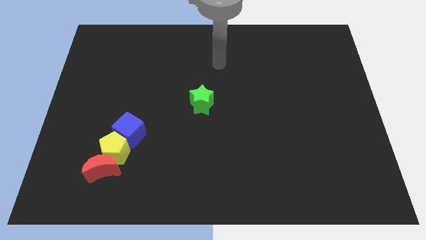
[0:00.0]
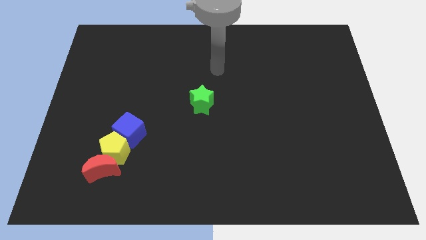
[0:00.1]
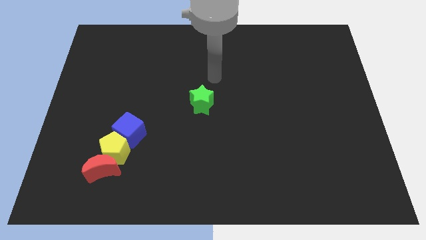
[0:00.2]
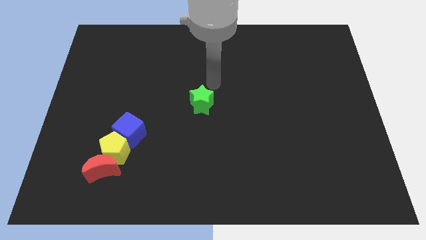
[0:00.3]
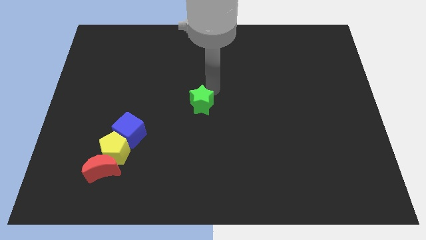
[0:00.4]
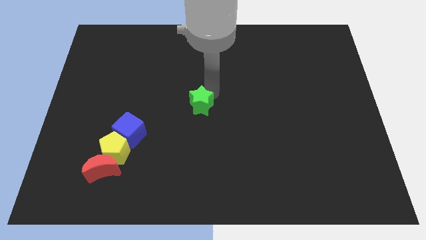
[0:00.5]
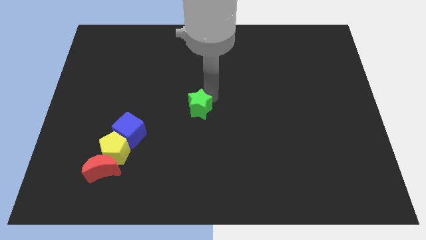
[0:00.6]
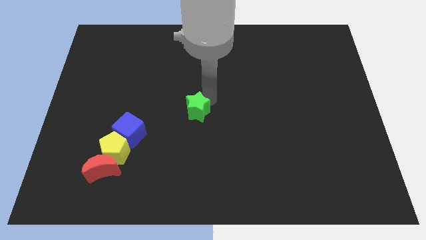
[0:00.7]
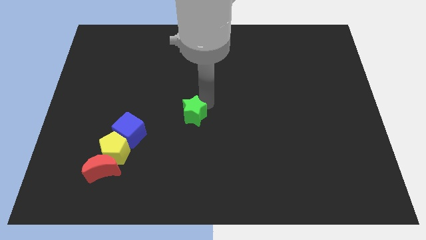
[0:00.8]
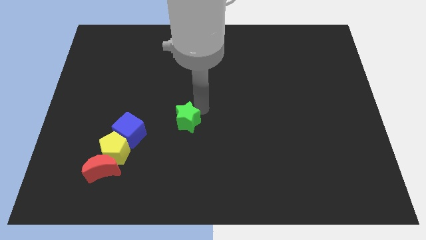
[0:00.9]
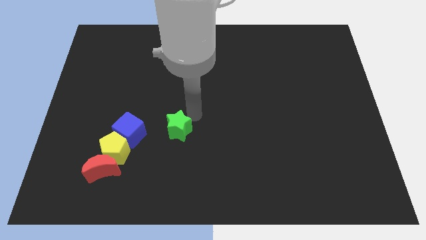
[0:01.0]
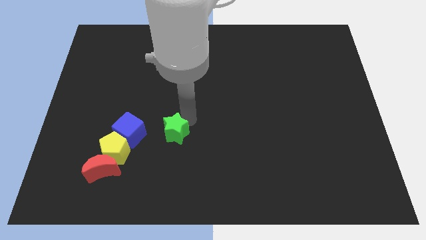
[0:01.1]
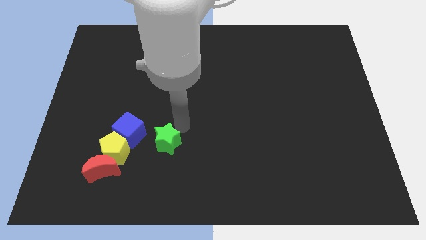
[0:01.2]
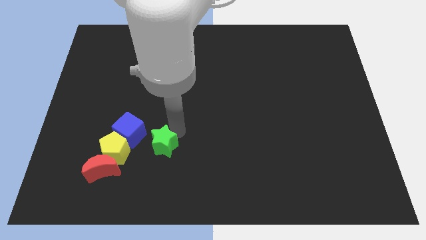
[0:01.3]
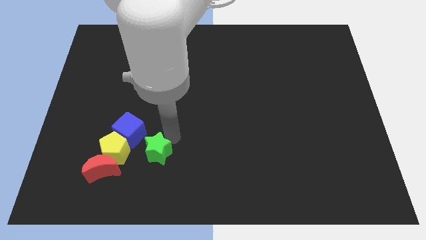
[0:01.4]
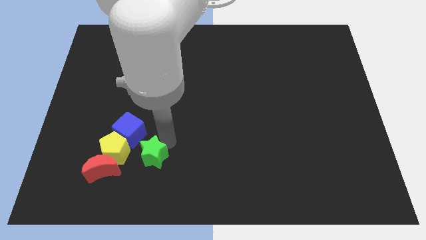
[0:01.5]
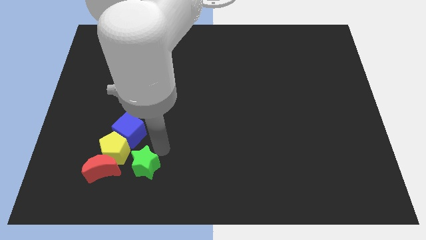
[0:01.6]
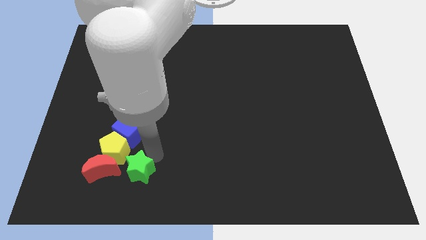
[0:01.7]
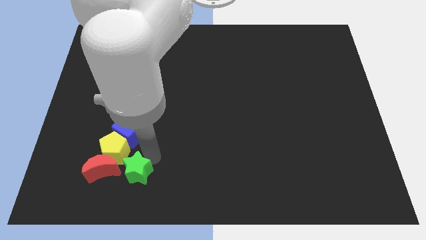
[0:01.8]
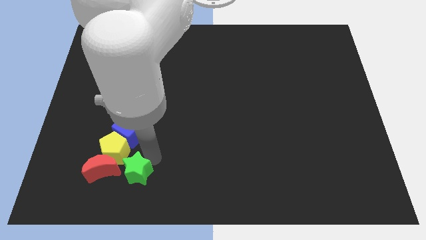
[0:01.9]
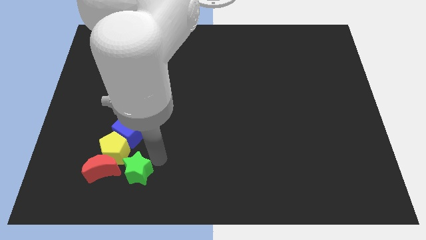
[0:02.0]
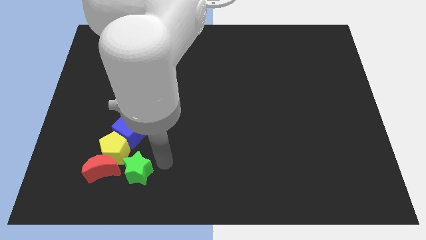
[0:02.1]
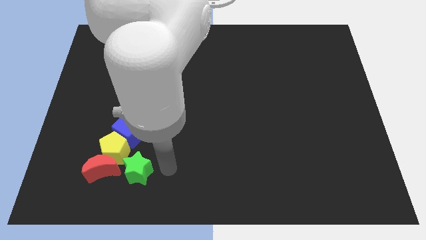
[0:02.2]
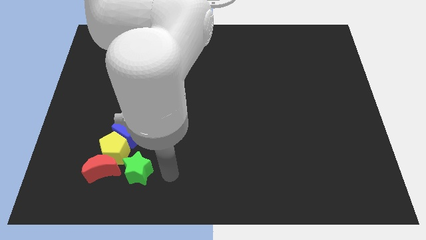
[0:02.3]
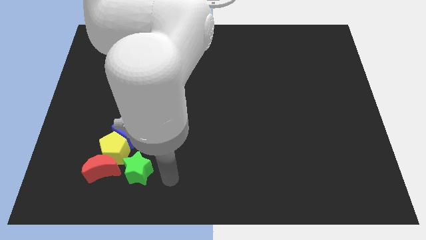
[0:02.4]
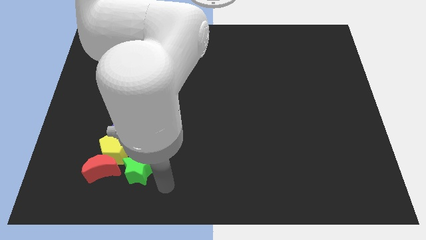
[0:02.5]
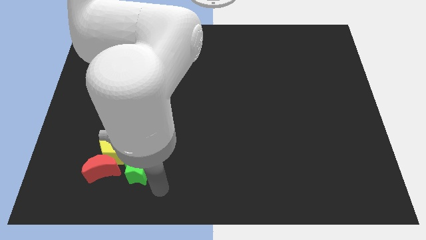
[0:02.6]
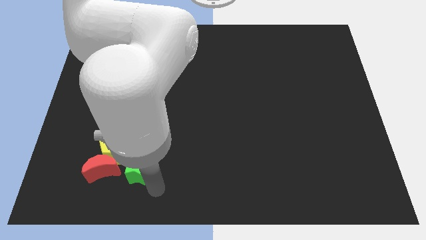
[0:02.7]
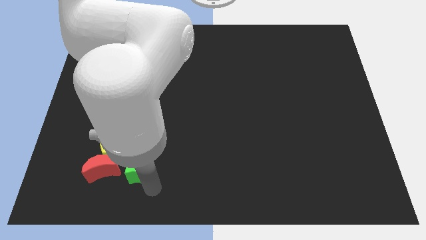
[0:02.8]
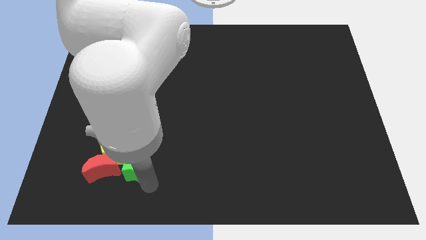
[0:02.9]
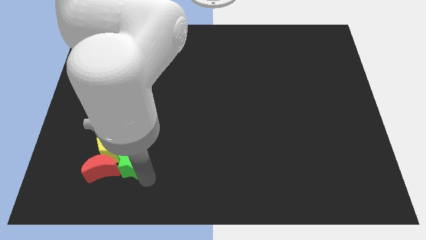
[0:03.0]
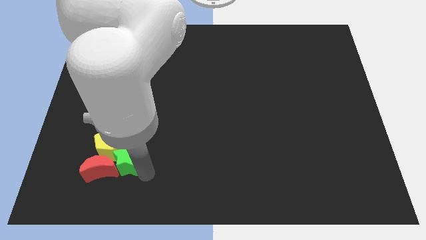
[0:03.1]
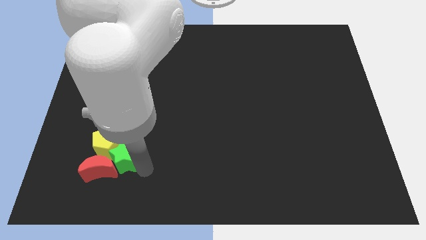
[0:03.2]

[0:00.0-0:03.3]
push the green star close to the yellow block

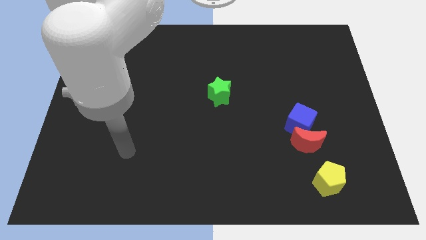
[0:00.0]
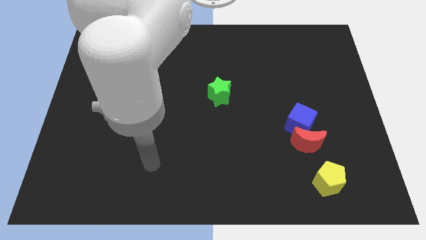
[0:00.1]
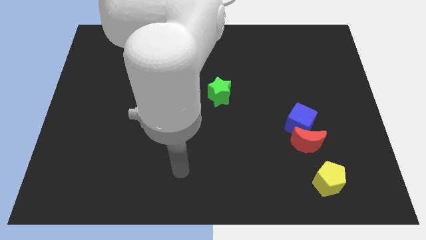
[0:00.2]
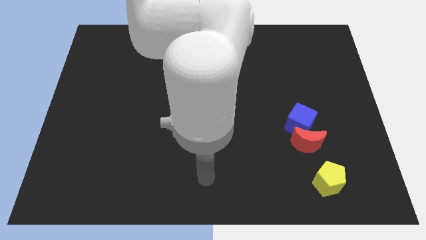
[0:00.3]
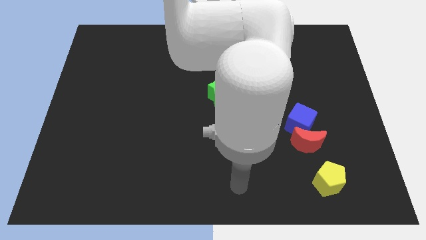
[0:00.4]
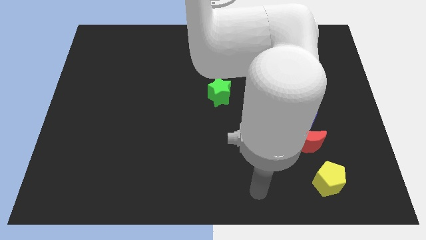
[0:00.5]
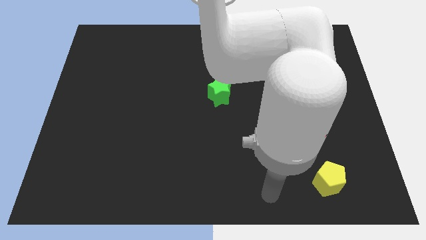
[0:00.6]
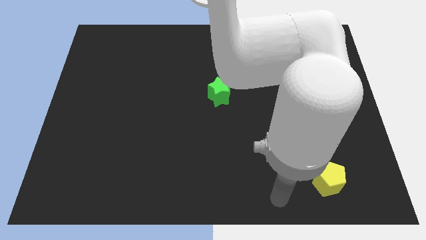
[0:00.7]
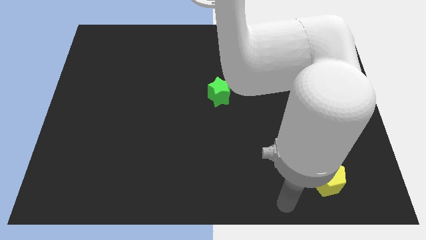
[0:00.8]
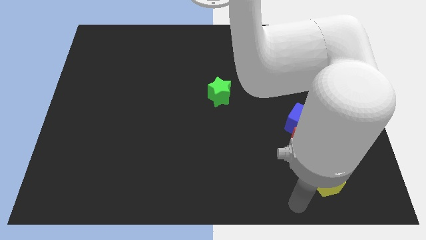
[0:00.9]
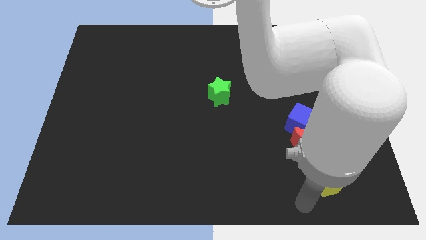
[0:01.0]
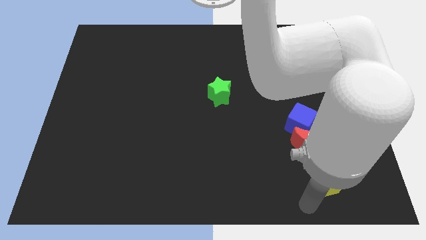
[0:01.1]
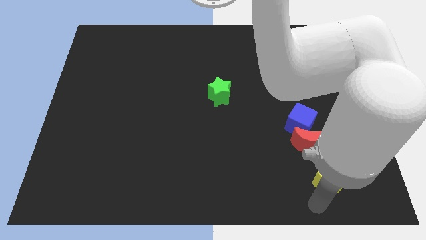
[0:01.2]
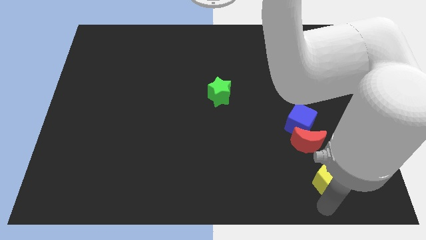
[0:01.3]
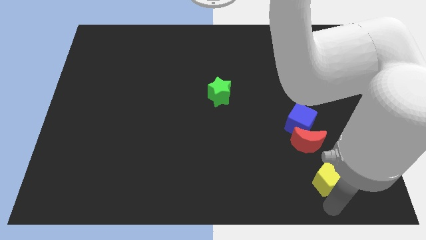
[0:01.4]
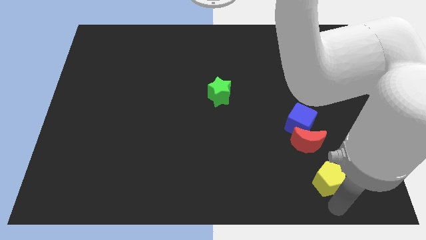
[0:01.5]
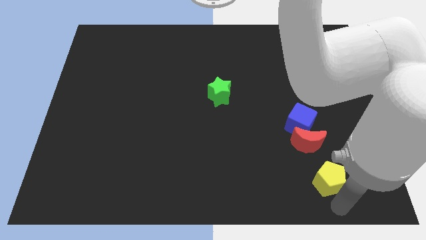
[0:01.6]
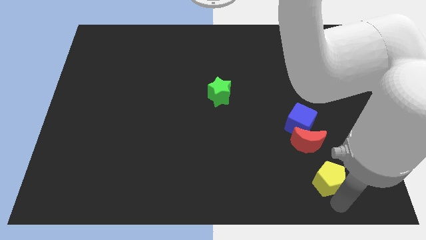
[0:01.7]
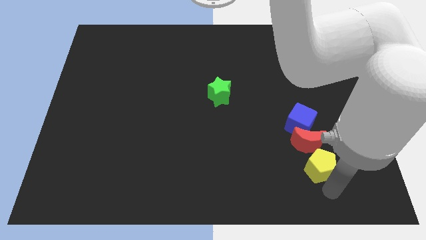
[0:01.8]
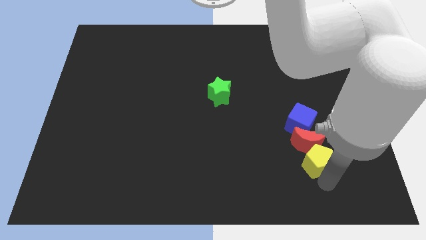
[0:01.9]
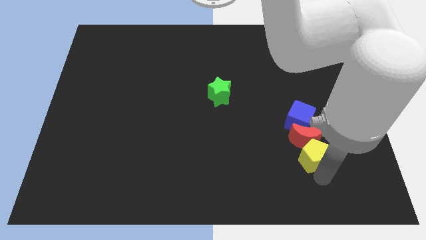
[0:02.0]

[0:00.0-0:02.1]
slide the yellow block close to the moon

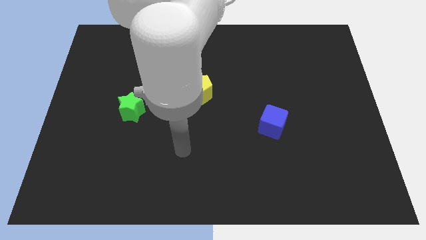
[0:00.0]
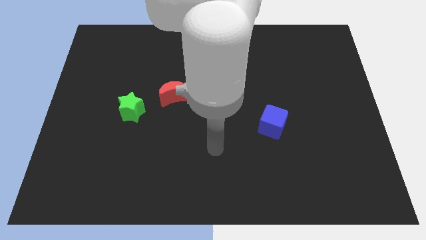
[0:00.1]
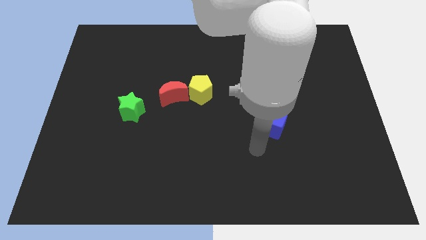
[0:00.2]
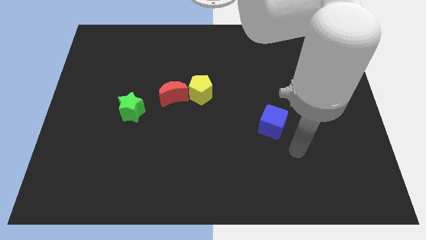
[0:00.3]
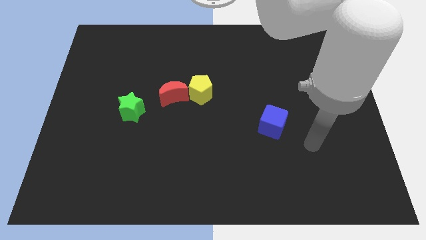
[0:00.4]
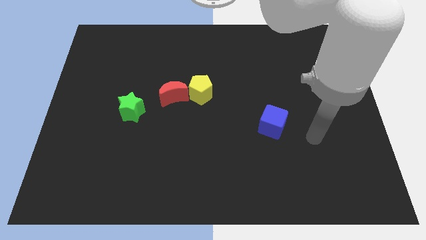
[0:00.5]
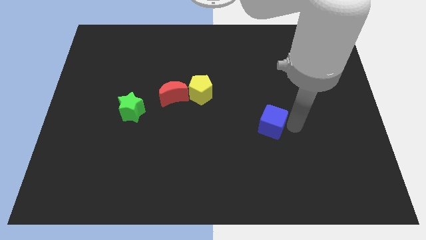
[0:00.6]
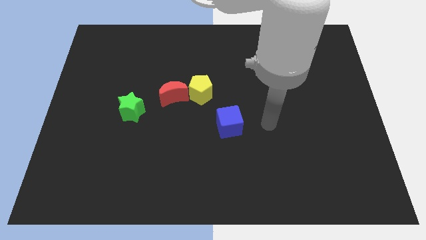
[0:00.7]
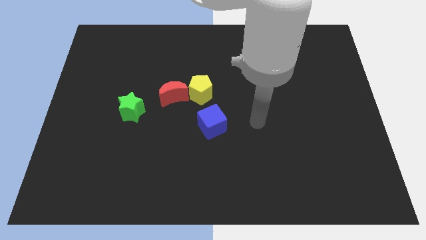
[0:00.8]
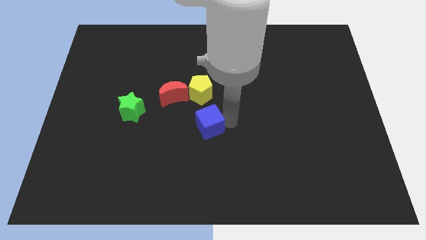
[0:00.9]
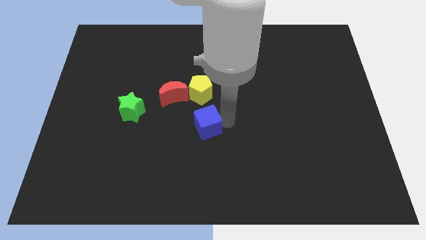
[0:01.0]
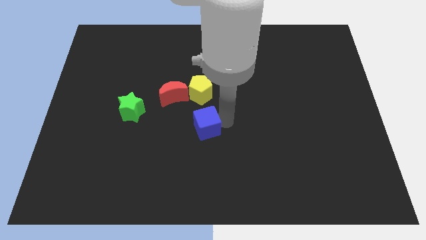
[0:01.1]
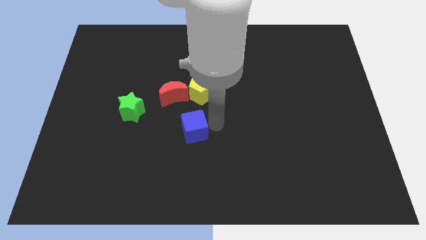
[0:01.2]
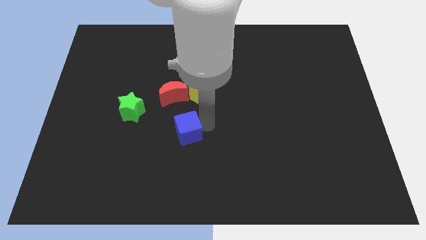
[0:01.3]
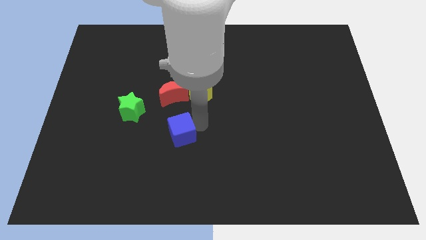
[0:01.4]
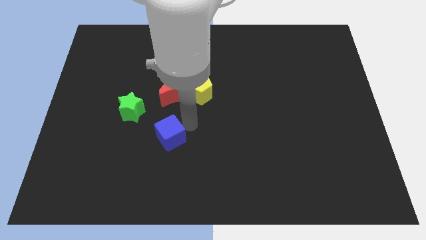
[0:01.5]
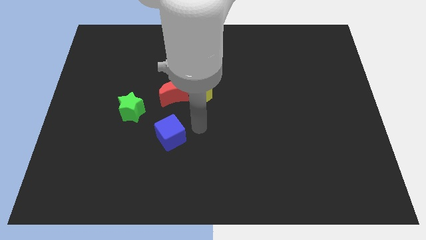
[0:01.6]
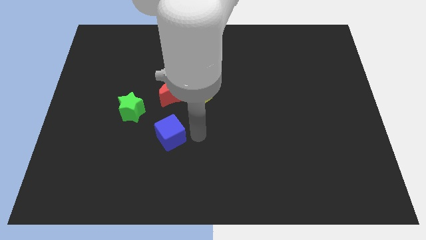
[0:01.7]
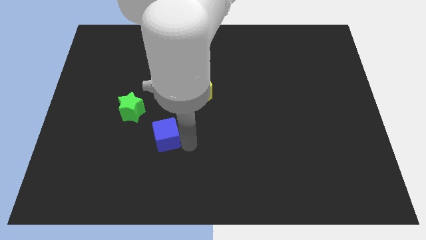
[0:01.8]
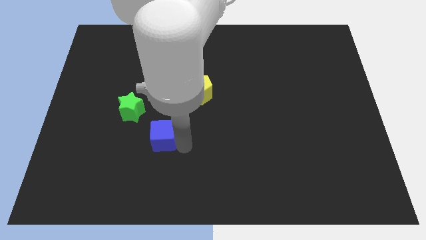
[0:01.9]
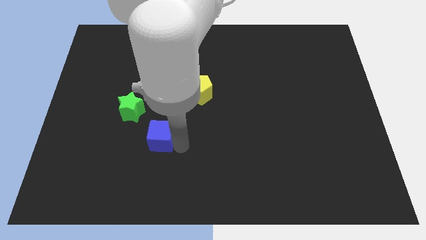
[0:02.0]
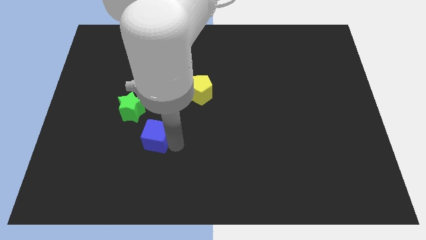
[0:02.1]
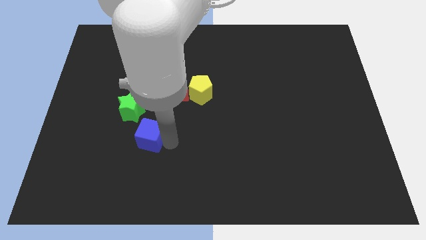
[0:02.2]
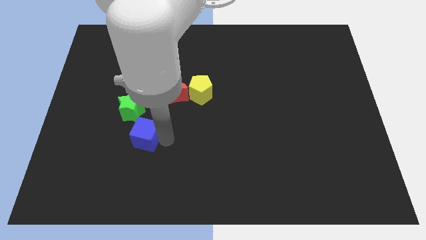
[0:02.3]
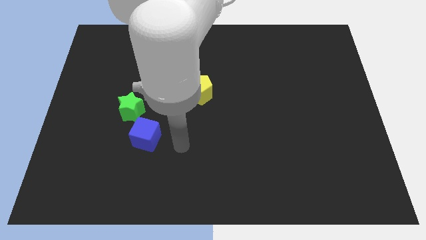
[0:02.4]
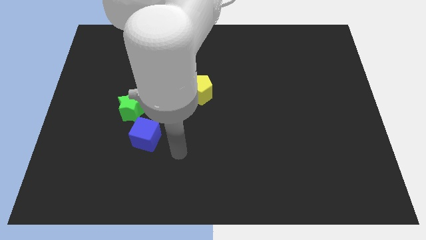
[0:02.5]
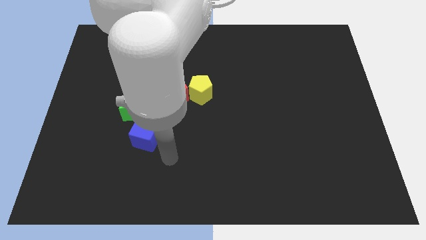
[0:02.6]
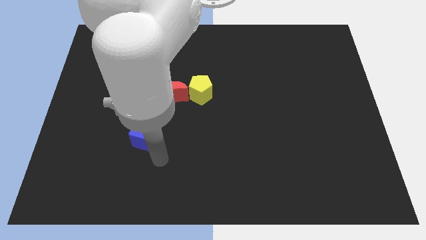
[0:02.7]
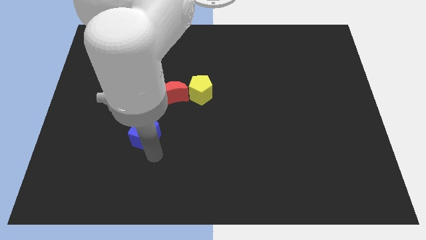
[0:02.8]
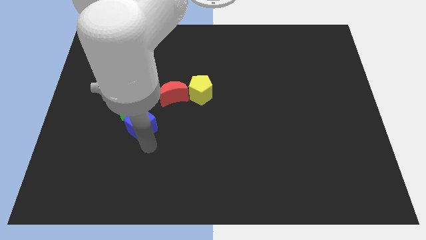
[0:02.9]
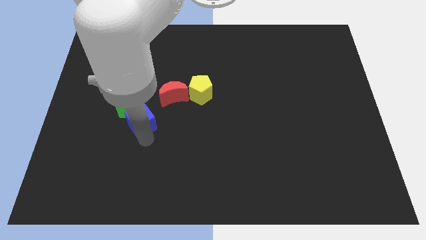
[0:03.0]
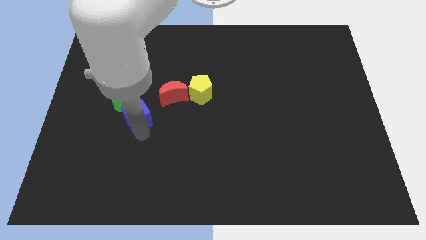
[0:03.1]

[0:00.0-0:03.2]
push the blue cube to the star
